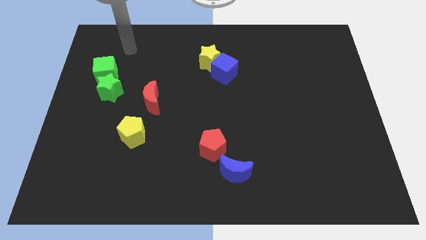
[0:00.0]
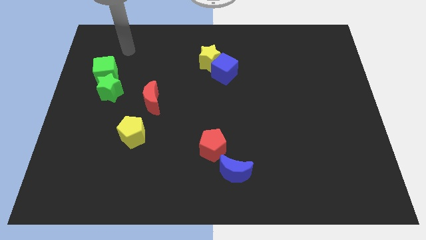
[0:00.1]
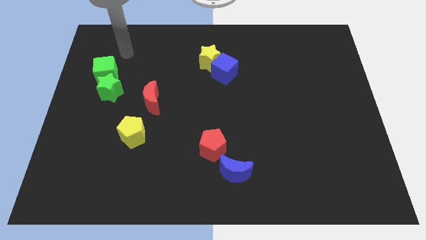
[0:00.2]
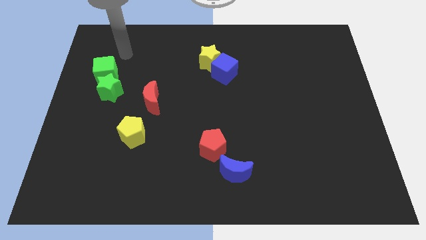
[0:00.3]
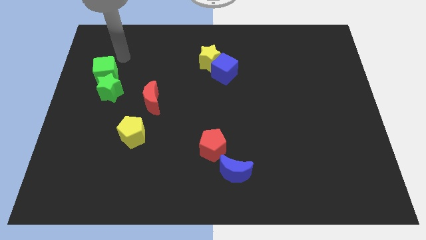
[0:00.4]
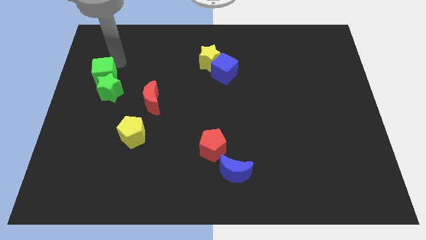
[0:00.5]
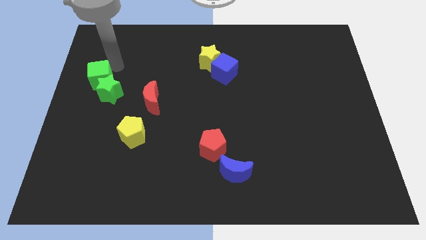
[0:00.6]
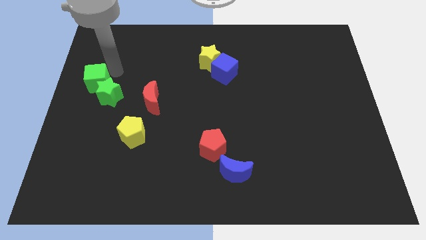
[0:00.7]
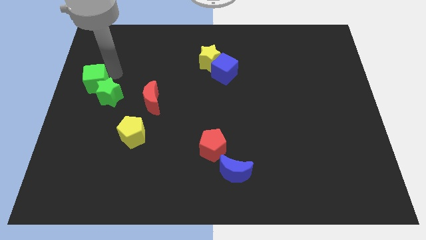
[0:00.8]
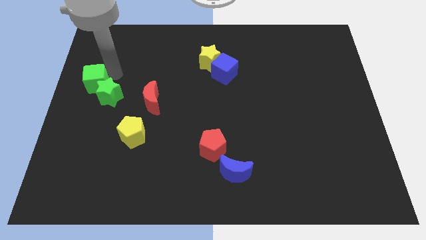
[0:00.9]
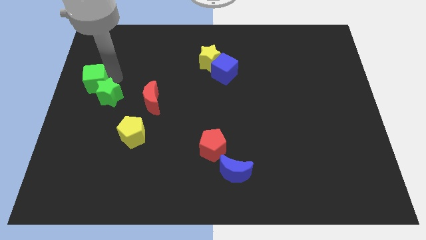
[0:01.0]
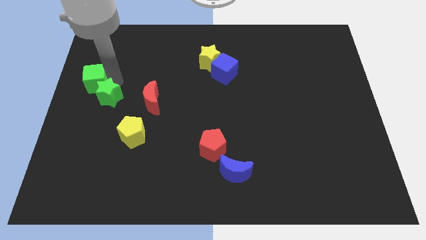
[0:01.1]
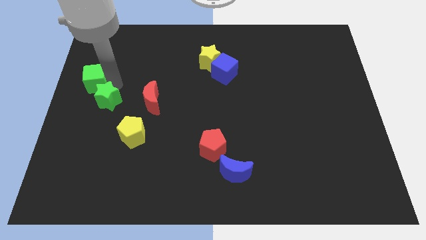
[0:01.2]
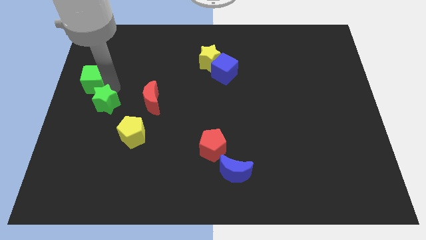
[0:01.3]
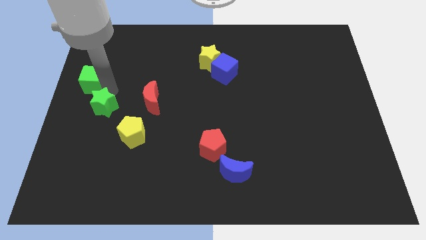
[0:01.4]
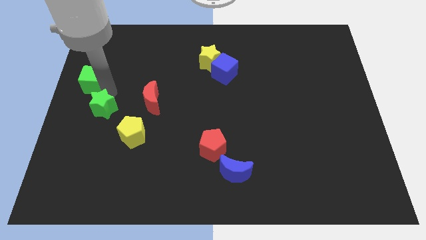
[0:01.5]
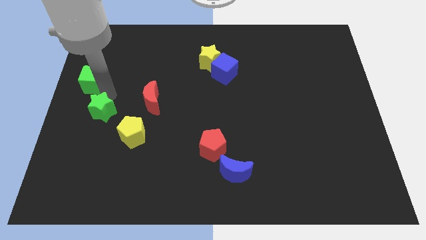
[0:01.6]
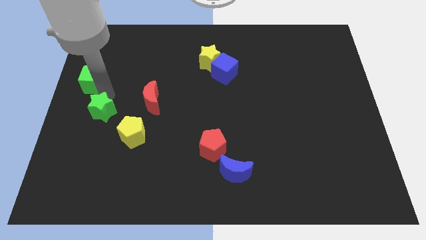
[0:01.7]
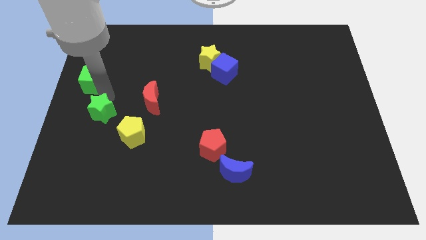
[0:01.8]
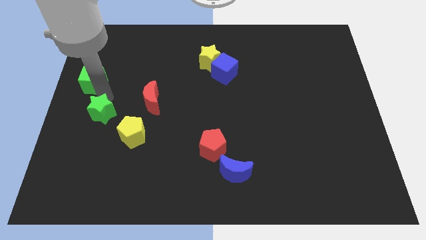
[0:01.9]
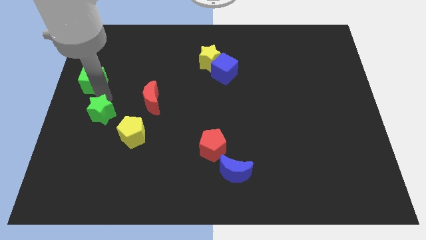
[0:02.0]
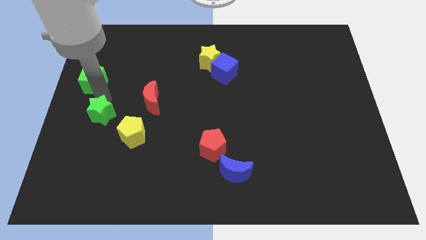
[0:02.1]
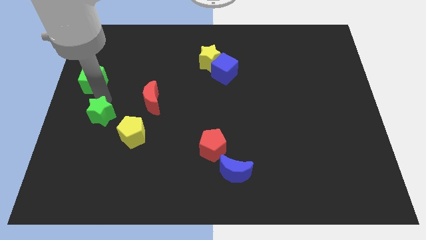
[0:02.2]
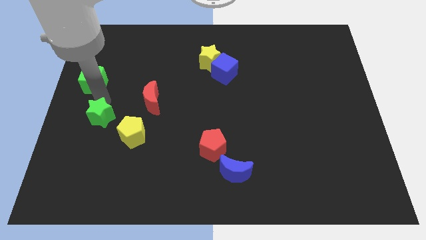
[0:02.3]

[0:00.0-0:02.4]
separate the green star away from the green cube

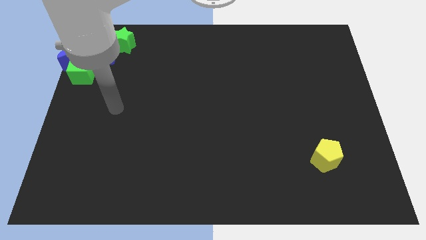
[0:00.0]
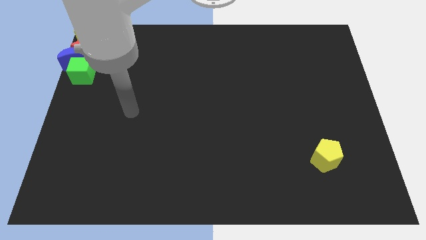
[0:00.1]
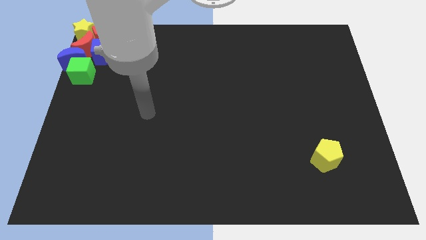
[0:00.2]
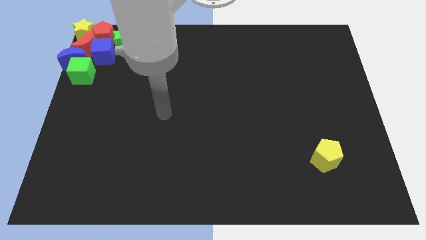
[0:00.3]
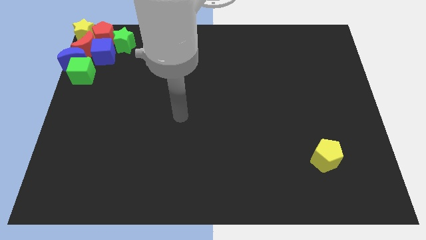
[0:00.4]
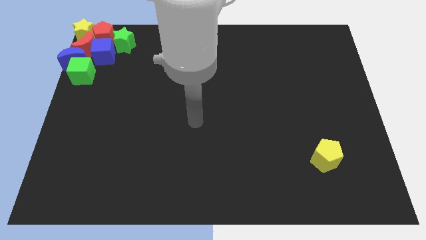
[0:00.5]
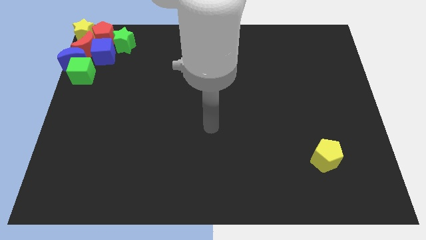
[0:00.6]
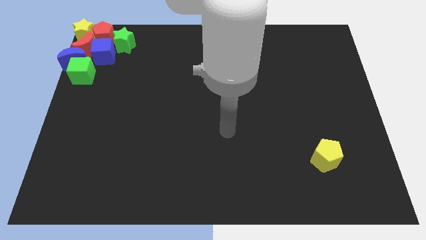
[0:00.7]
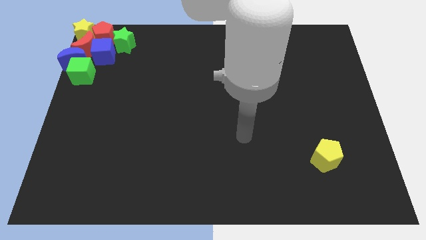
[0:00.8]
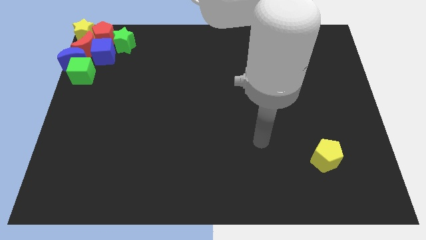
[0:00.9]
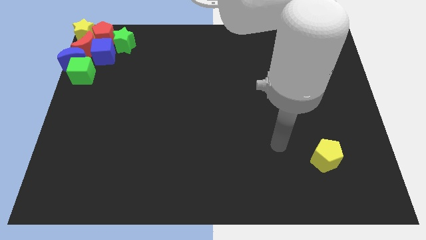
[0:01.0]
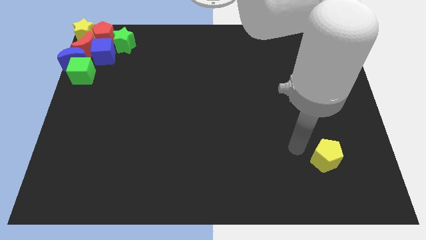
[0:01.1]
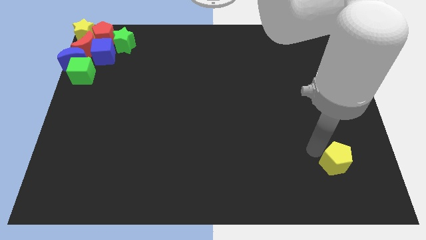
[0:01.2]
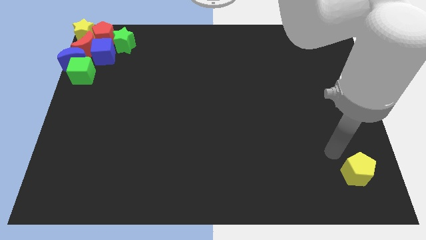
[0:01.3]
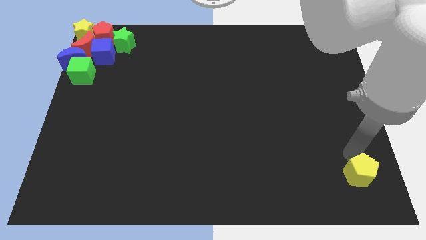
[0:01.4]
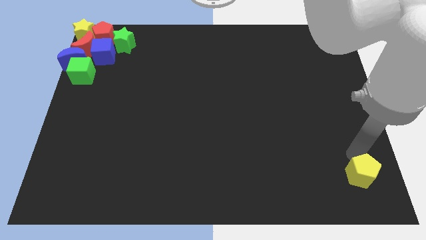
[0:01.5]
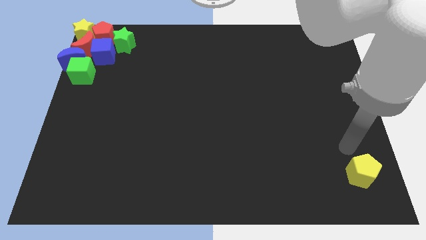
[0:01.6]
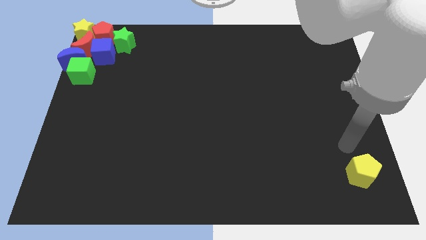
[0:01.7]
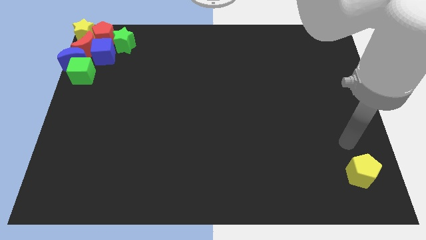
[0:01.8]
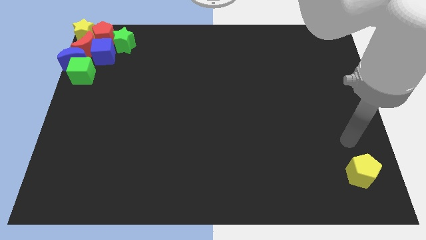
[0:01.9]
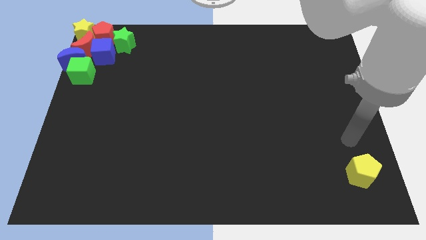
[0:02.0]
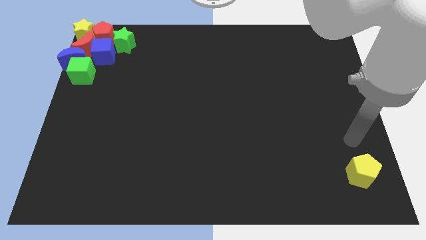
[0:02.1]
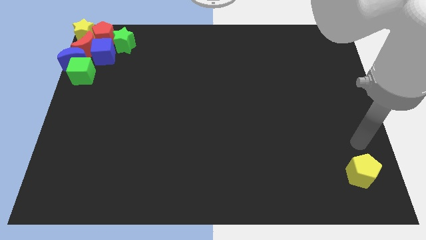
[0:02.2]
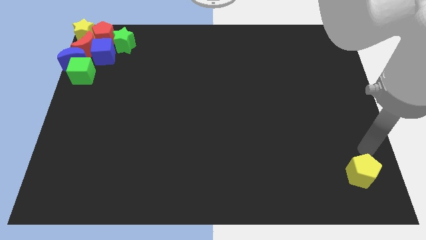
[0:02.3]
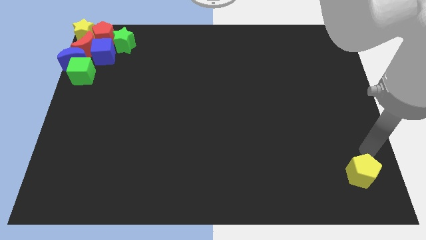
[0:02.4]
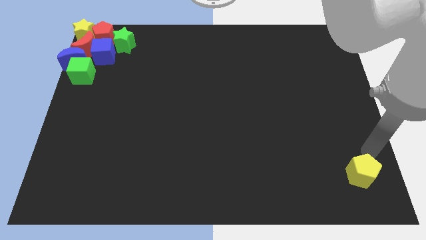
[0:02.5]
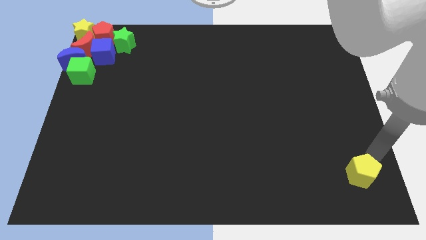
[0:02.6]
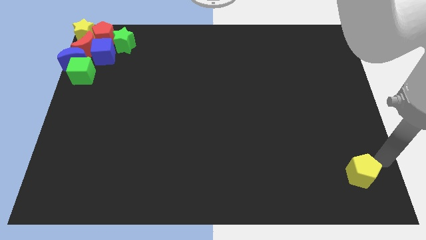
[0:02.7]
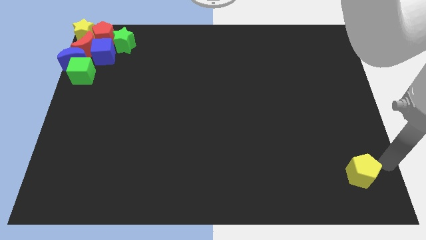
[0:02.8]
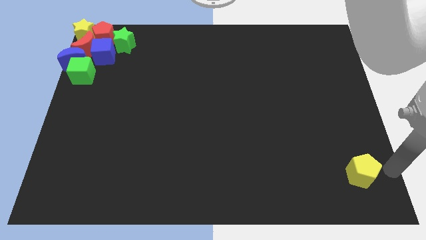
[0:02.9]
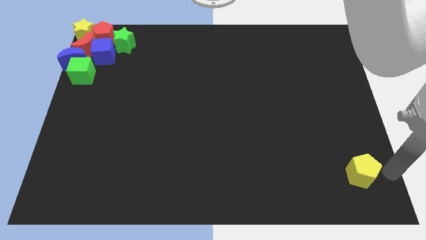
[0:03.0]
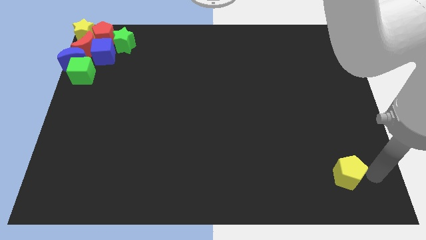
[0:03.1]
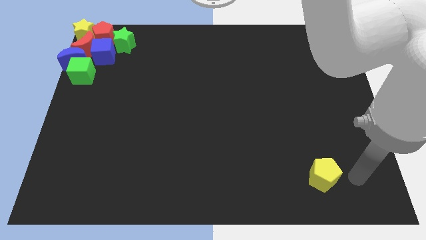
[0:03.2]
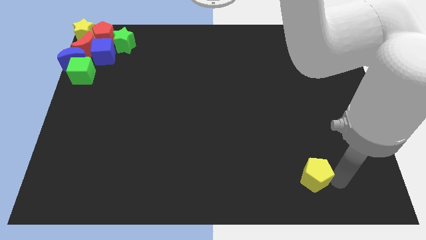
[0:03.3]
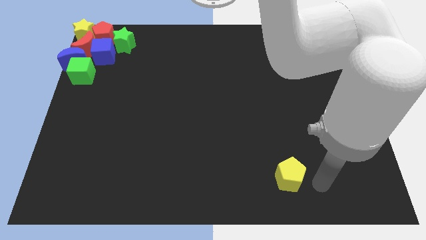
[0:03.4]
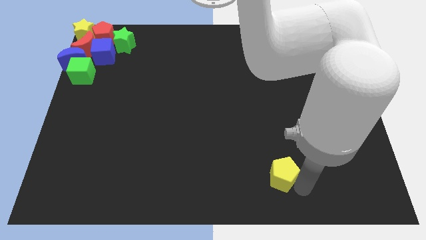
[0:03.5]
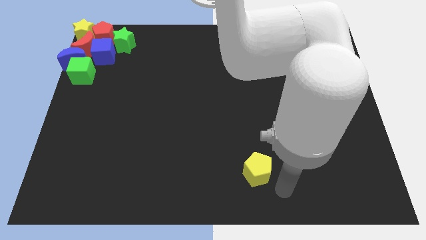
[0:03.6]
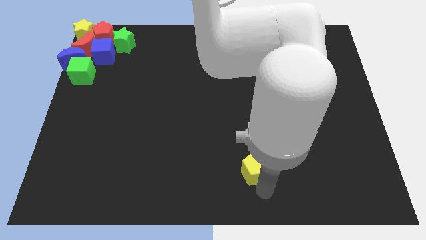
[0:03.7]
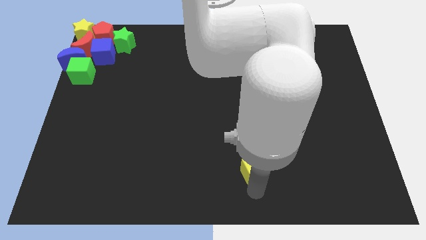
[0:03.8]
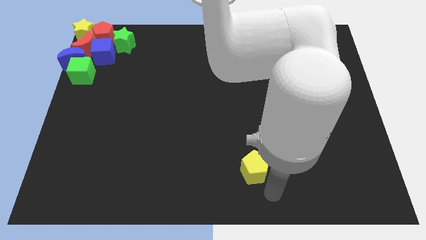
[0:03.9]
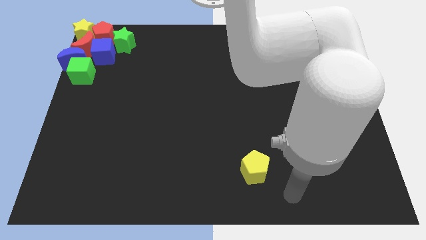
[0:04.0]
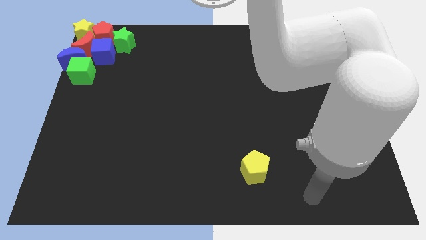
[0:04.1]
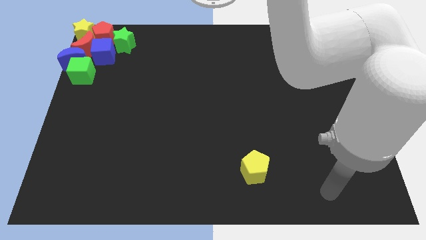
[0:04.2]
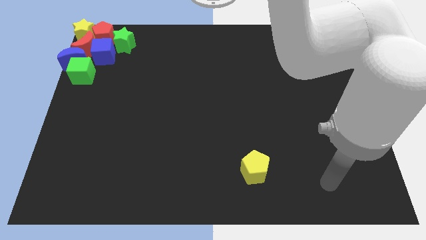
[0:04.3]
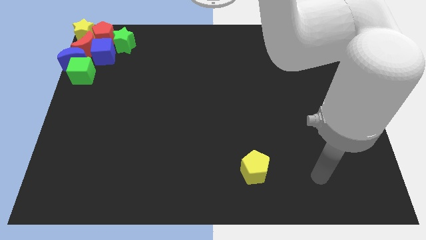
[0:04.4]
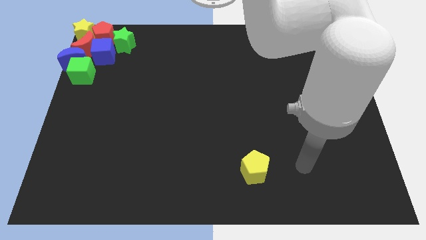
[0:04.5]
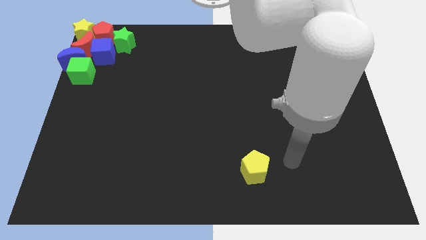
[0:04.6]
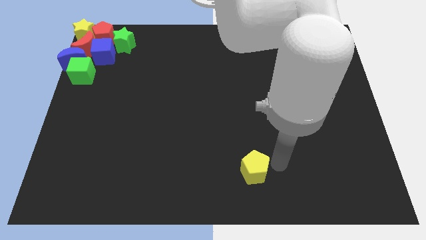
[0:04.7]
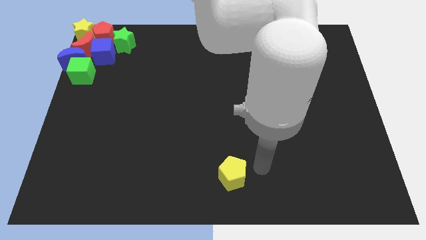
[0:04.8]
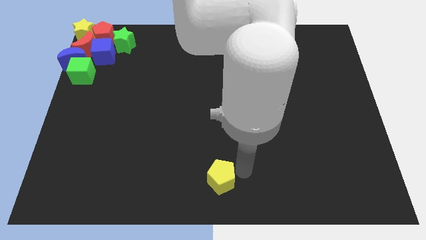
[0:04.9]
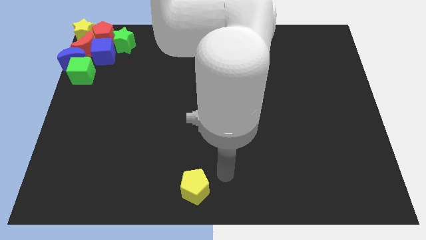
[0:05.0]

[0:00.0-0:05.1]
push the pentagon downwards

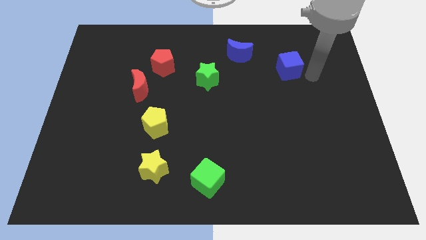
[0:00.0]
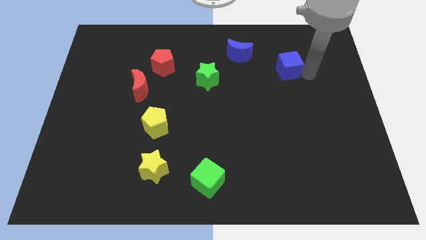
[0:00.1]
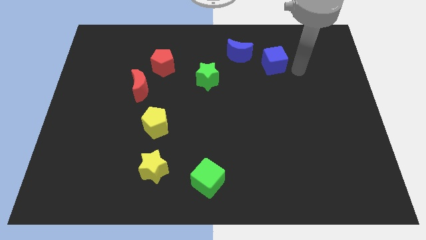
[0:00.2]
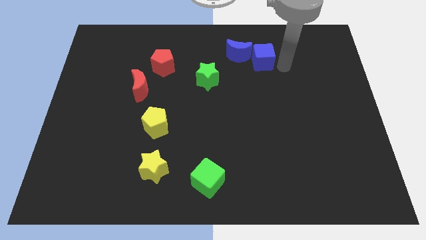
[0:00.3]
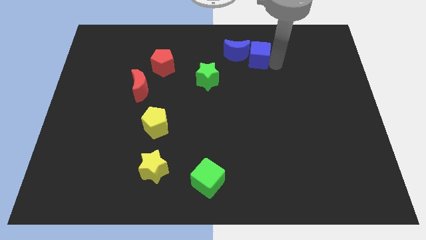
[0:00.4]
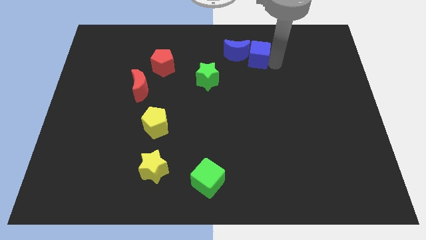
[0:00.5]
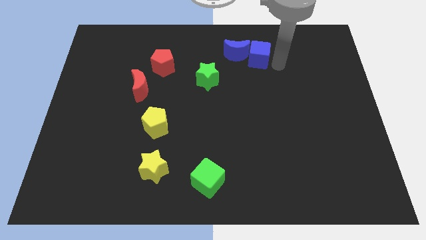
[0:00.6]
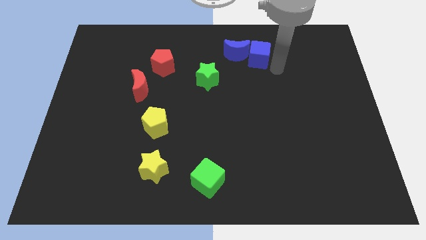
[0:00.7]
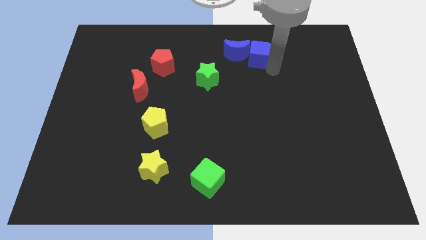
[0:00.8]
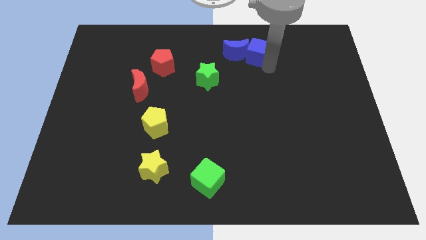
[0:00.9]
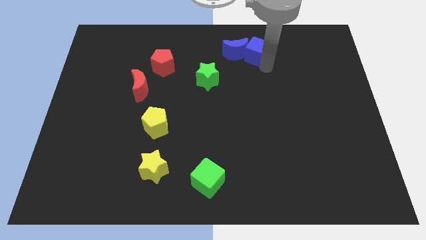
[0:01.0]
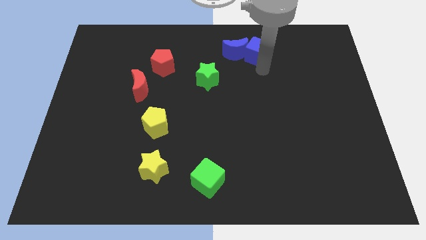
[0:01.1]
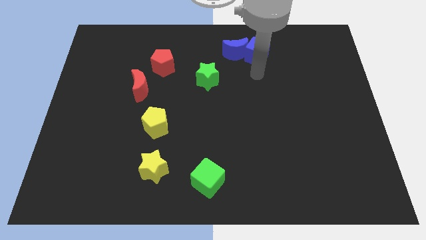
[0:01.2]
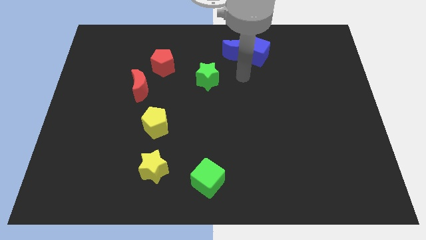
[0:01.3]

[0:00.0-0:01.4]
move the blue cube into the blue moon
